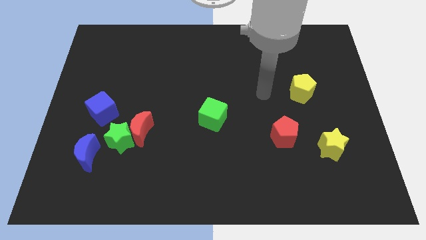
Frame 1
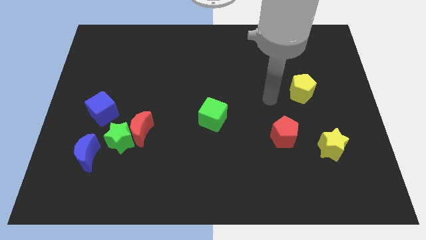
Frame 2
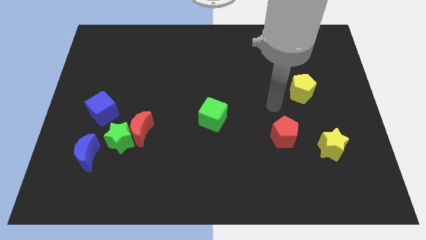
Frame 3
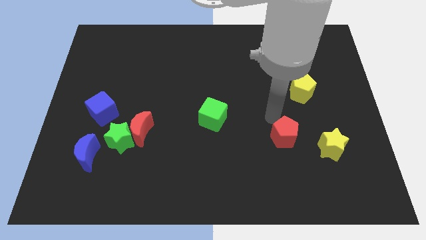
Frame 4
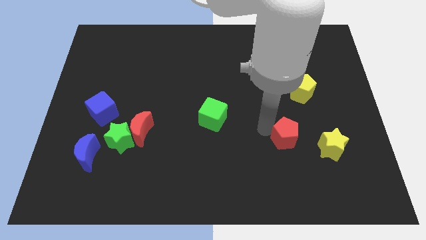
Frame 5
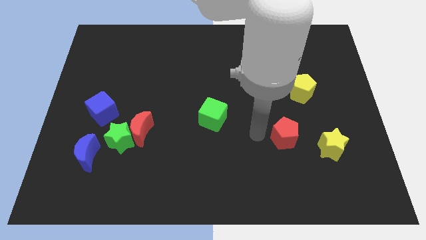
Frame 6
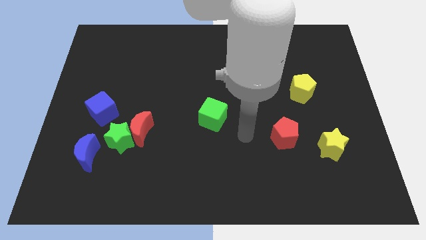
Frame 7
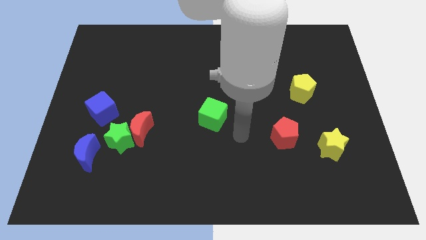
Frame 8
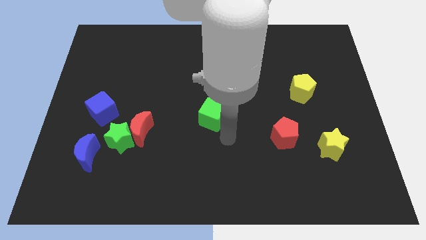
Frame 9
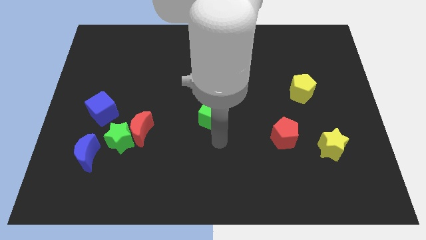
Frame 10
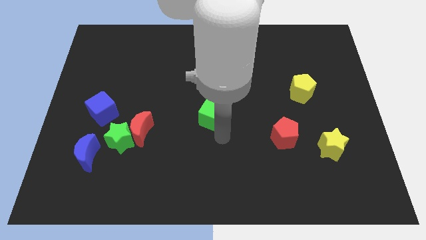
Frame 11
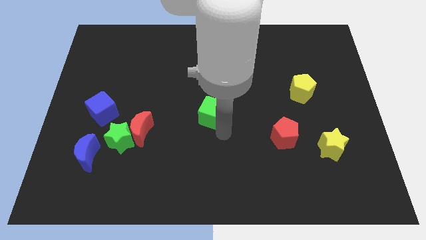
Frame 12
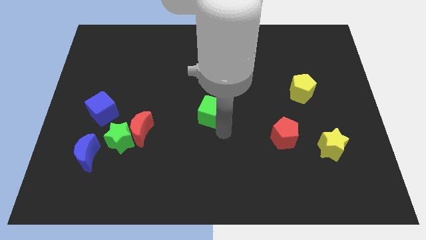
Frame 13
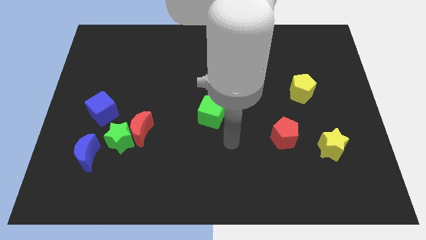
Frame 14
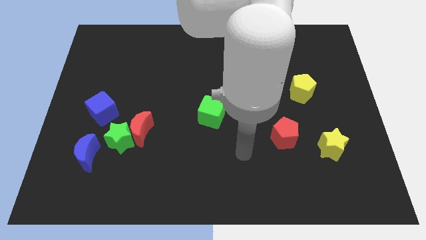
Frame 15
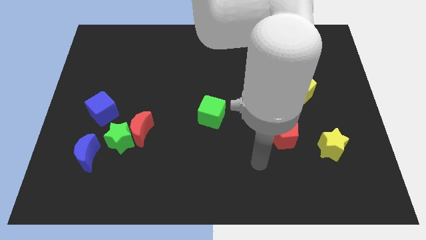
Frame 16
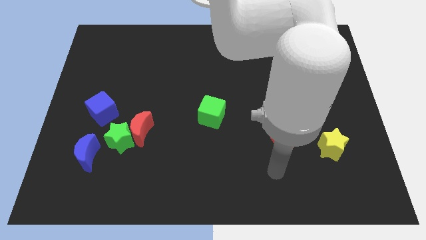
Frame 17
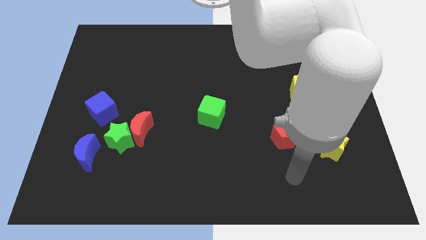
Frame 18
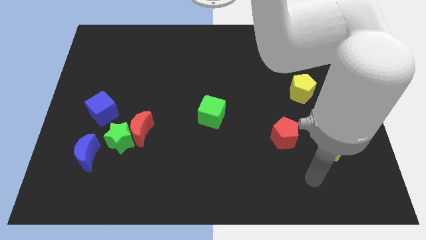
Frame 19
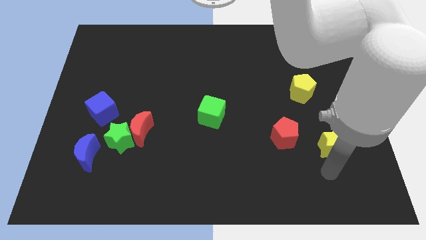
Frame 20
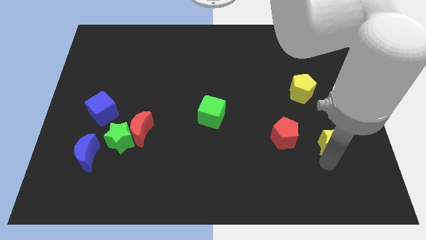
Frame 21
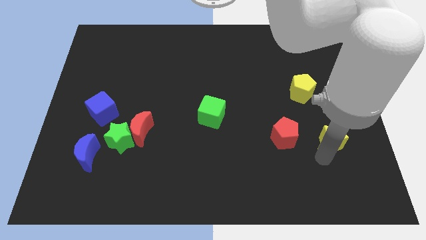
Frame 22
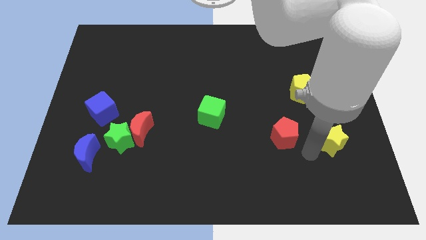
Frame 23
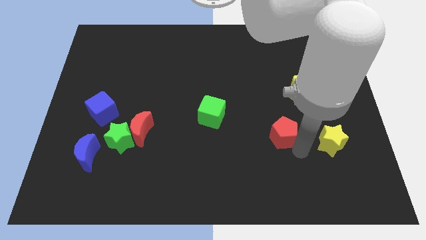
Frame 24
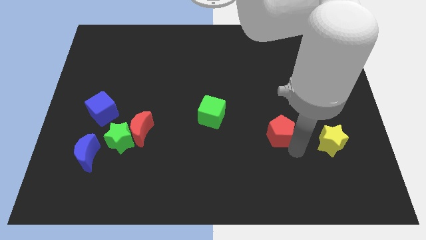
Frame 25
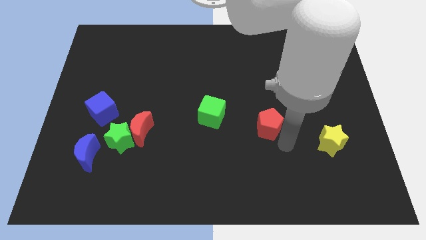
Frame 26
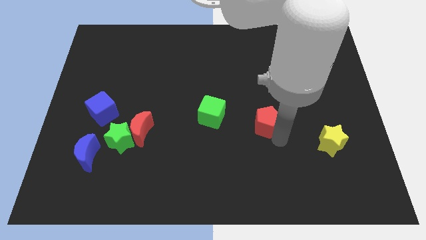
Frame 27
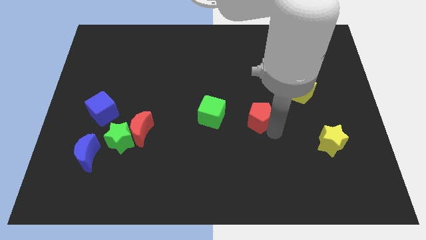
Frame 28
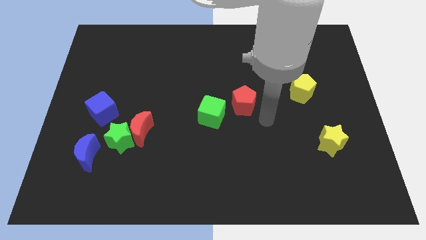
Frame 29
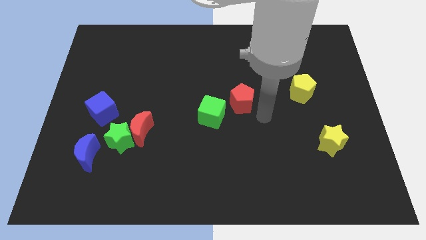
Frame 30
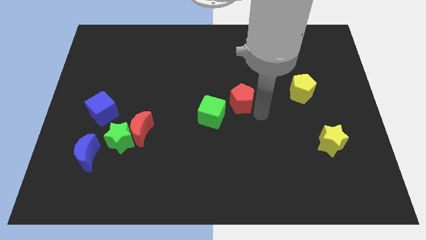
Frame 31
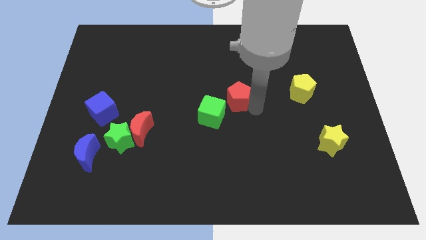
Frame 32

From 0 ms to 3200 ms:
place the red pentagon diagonal to the green cube

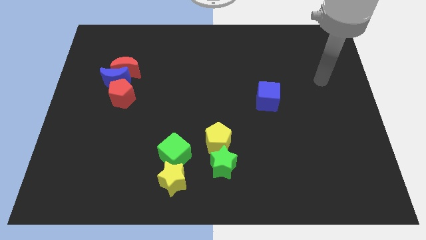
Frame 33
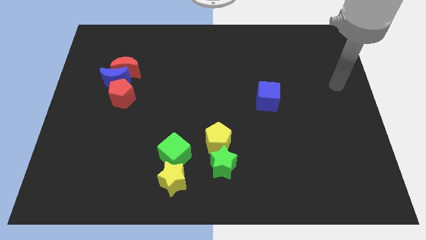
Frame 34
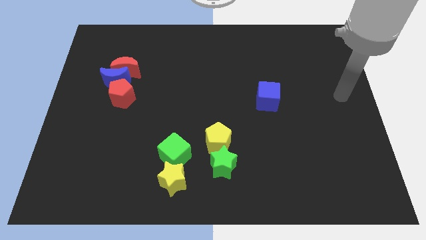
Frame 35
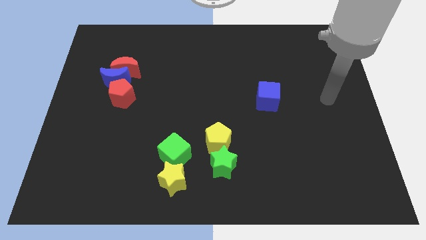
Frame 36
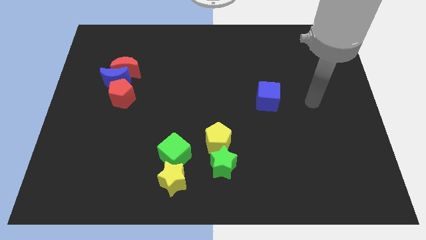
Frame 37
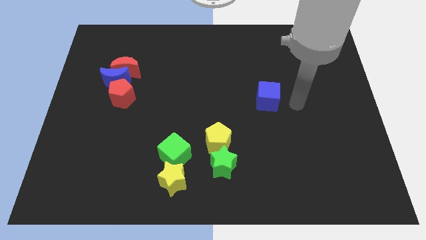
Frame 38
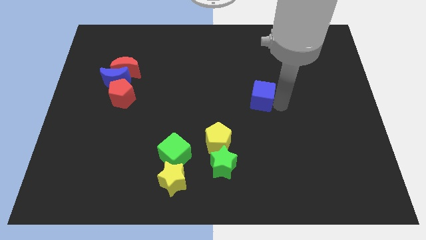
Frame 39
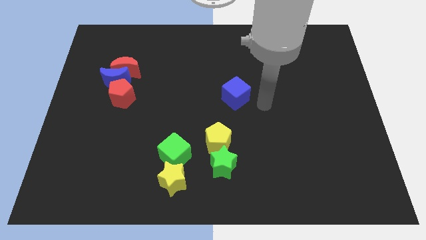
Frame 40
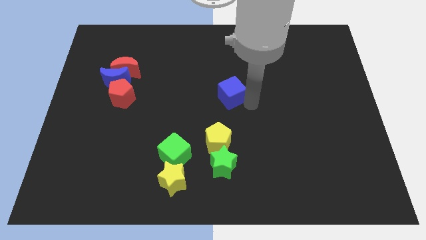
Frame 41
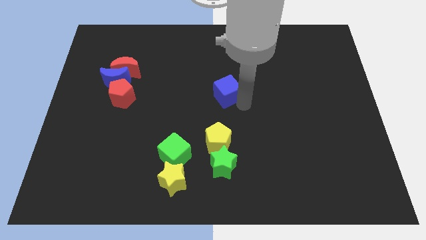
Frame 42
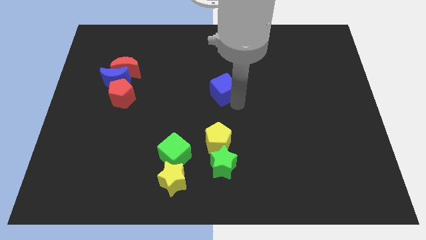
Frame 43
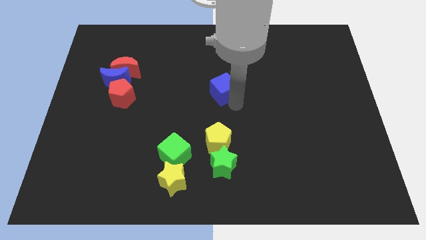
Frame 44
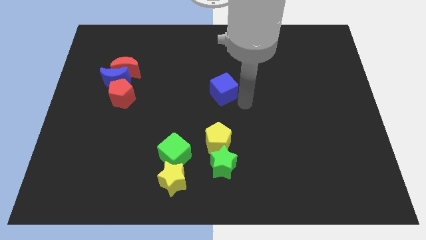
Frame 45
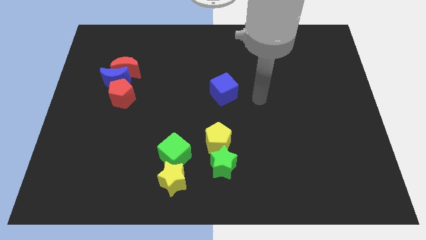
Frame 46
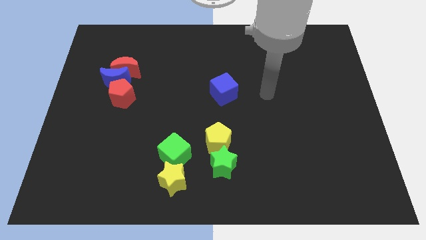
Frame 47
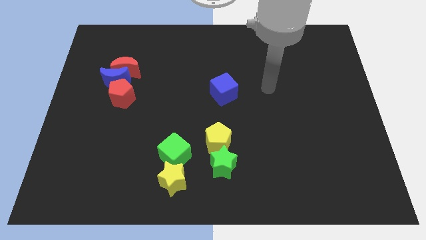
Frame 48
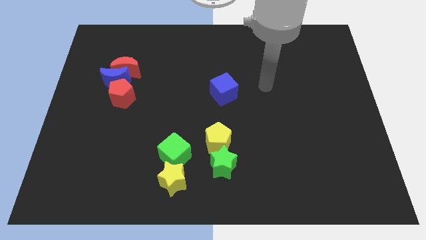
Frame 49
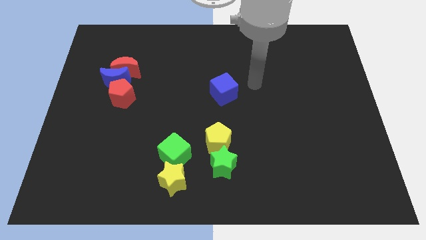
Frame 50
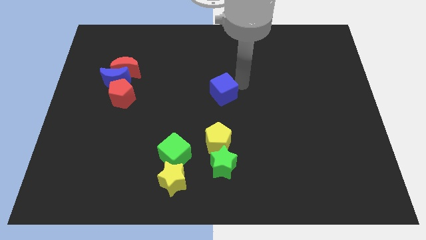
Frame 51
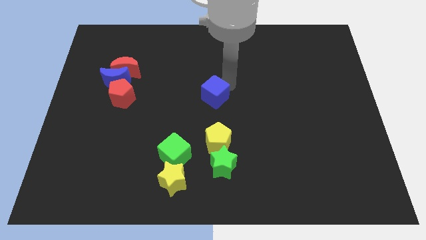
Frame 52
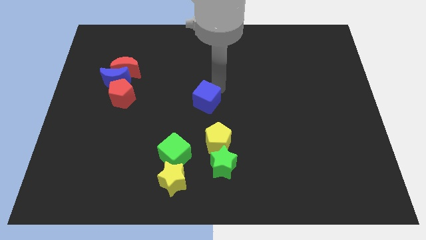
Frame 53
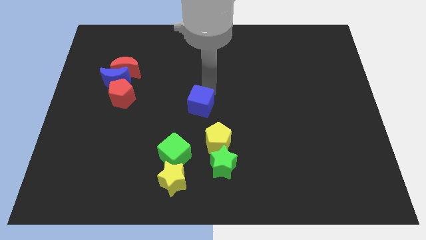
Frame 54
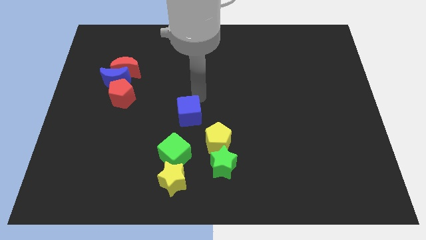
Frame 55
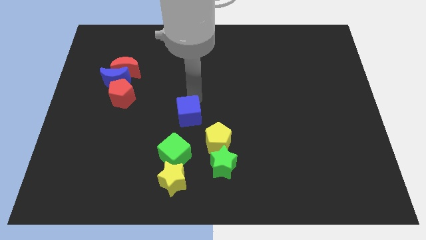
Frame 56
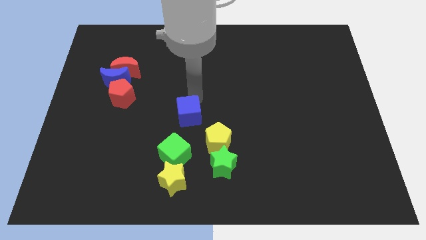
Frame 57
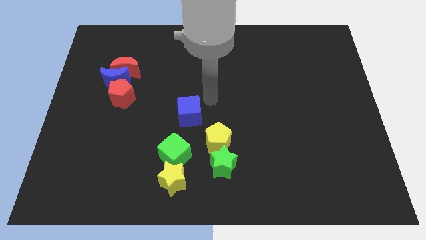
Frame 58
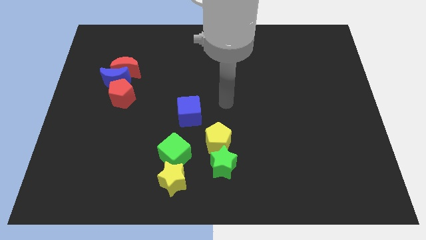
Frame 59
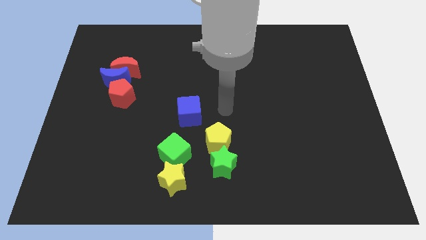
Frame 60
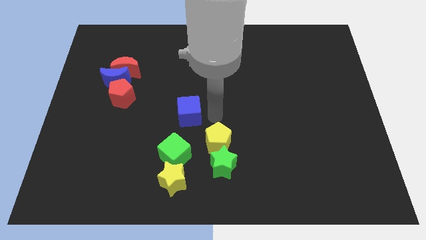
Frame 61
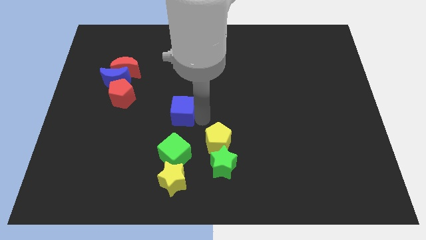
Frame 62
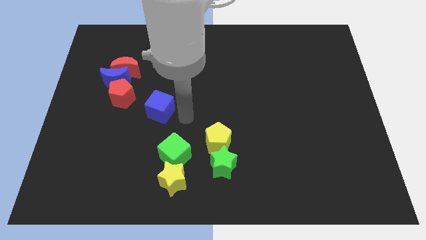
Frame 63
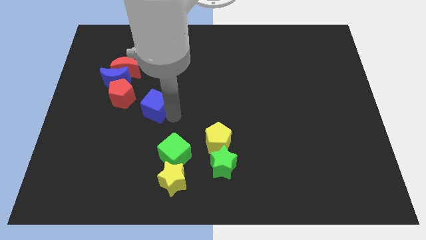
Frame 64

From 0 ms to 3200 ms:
move the blue cube to the top of the green cube

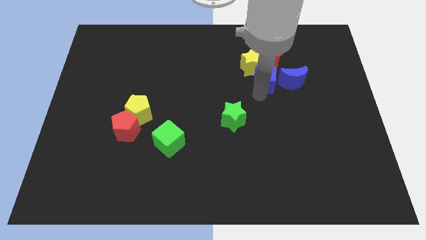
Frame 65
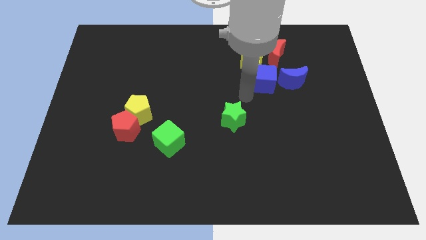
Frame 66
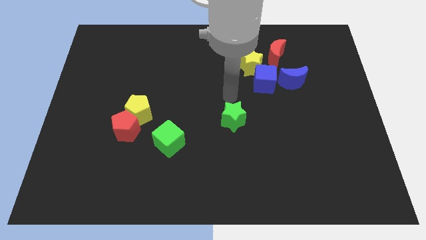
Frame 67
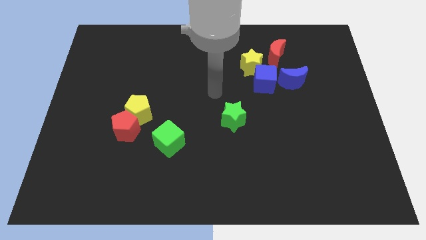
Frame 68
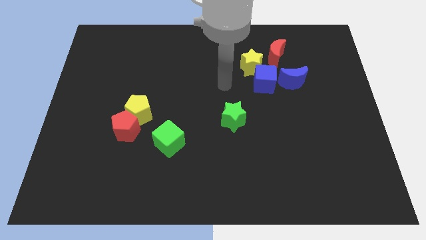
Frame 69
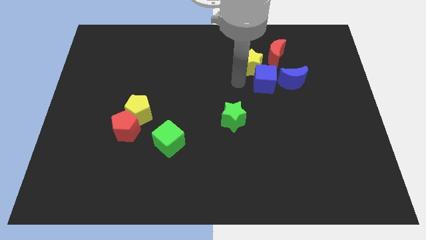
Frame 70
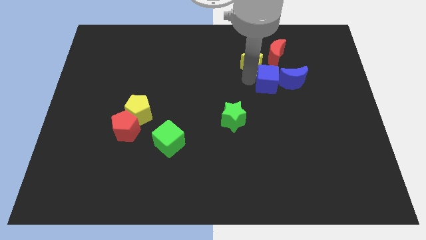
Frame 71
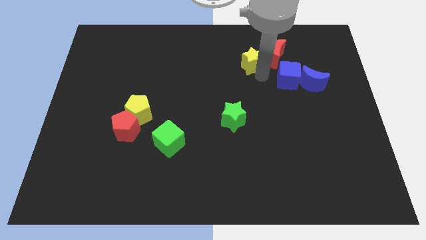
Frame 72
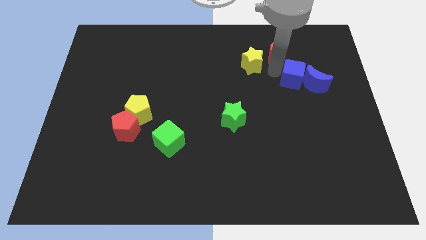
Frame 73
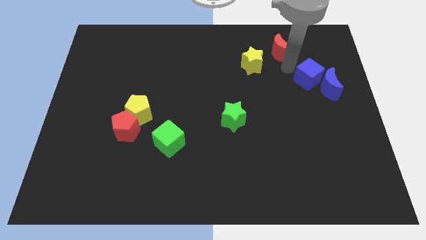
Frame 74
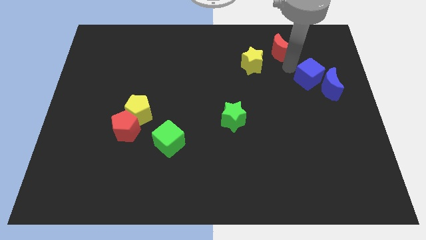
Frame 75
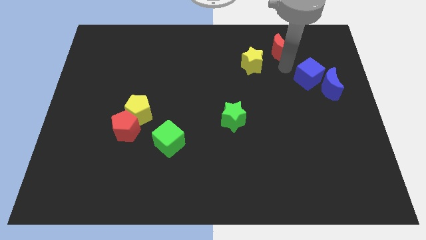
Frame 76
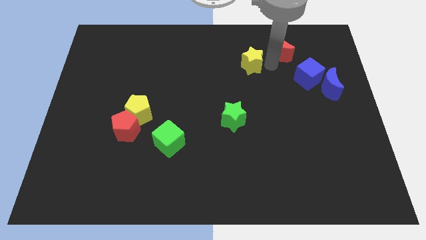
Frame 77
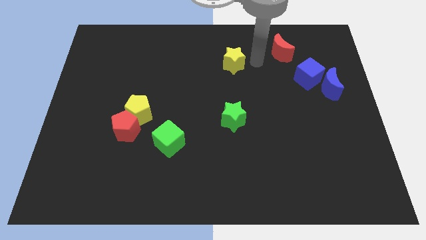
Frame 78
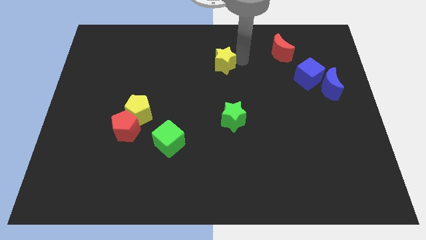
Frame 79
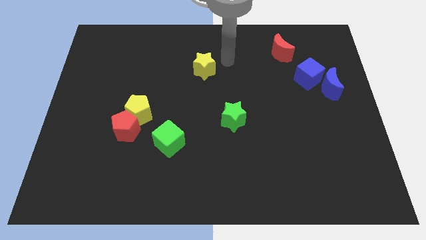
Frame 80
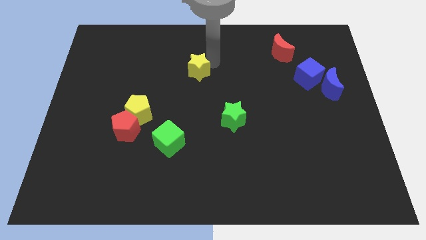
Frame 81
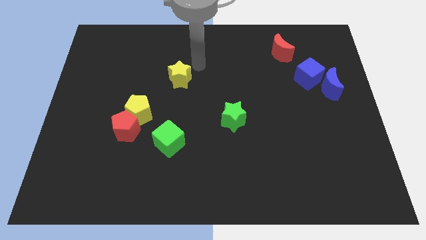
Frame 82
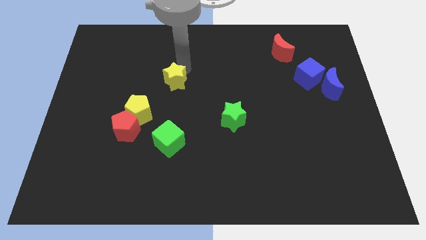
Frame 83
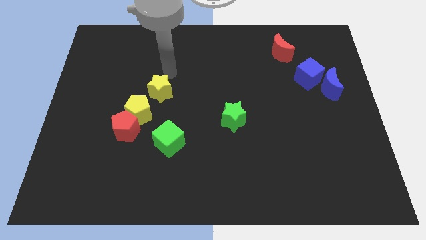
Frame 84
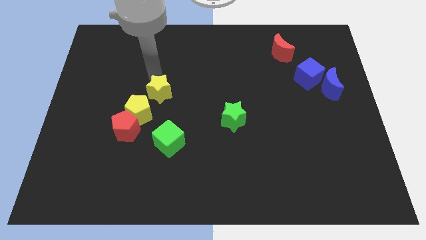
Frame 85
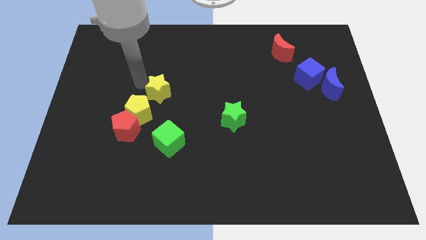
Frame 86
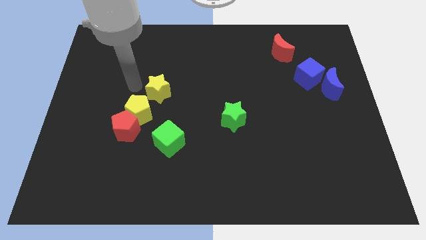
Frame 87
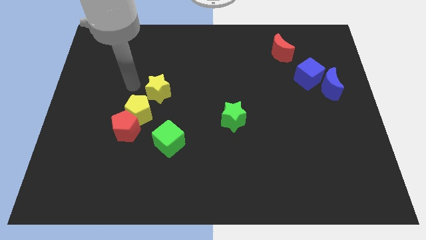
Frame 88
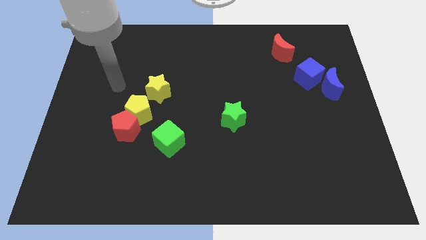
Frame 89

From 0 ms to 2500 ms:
move the yellow star to the top right of the yellow pentagon
